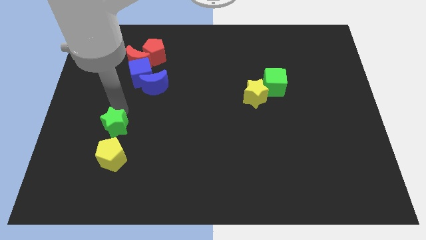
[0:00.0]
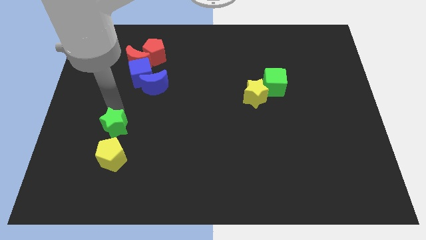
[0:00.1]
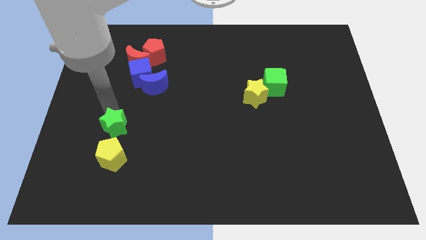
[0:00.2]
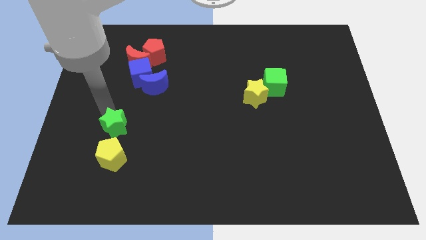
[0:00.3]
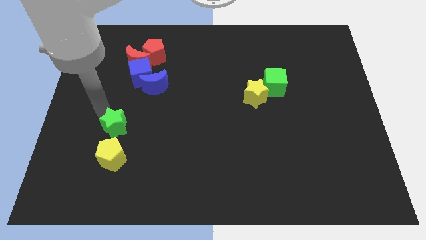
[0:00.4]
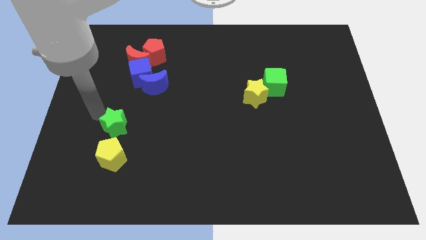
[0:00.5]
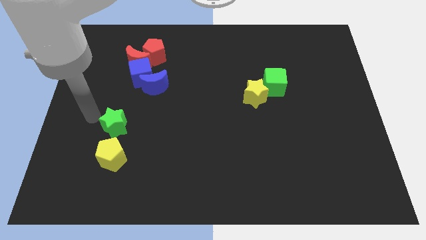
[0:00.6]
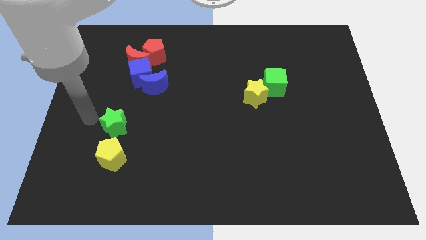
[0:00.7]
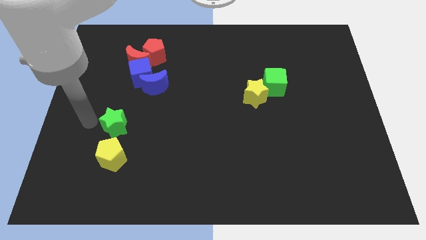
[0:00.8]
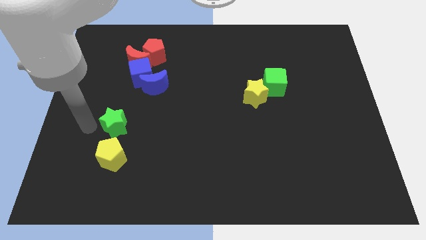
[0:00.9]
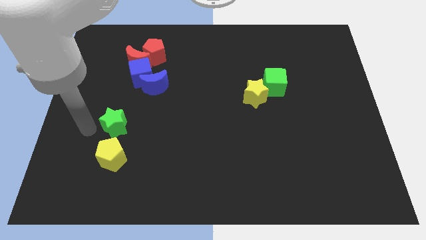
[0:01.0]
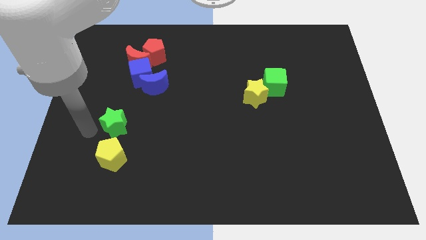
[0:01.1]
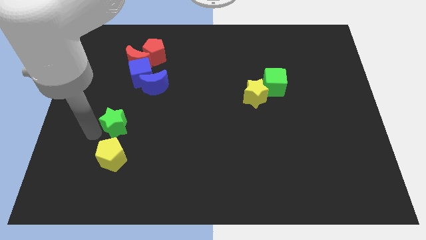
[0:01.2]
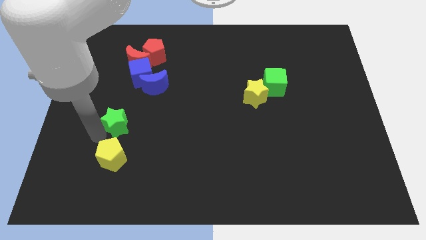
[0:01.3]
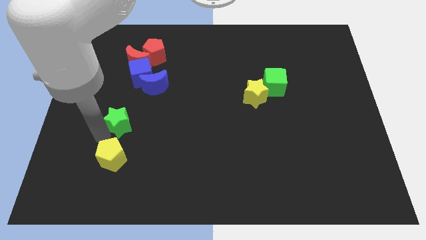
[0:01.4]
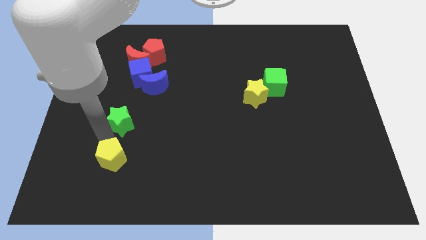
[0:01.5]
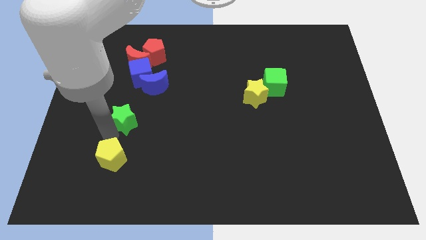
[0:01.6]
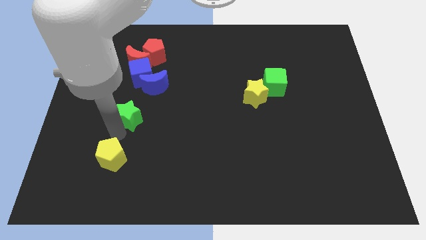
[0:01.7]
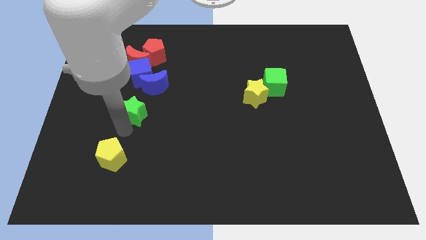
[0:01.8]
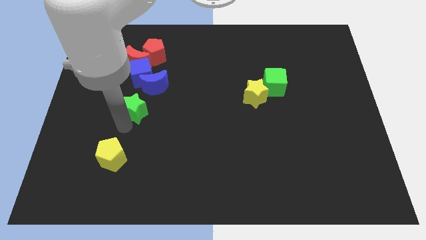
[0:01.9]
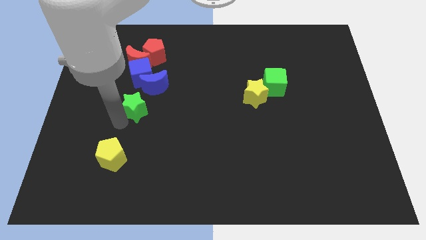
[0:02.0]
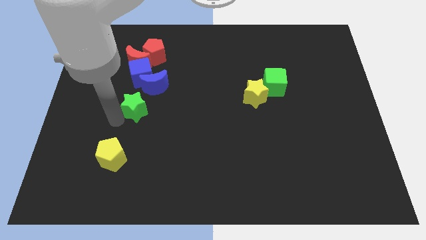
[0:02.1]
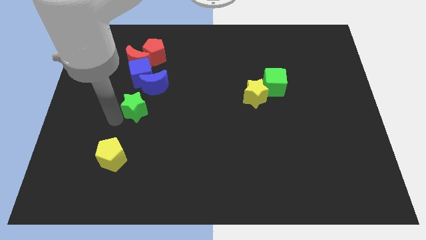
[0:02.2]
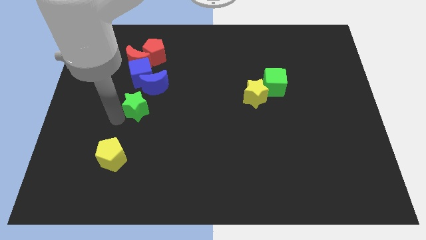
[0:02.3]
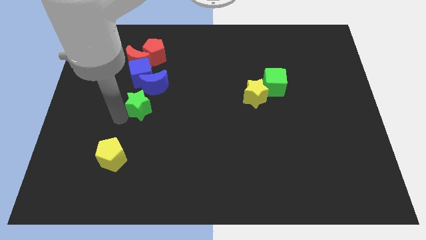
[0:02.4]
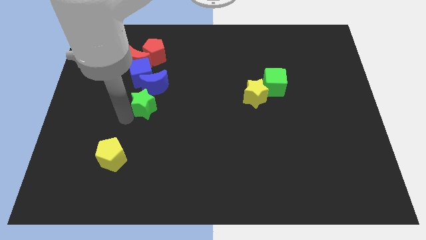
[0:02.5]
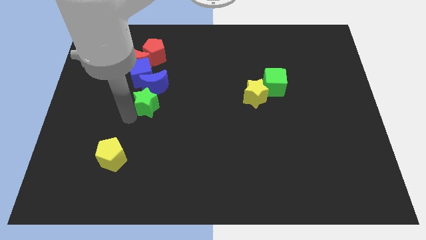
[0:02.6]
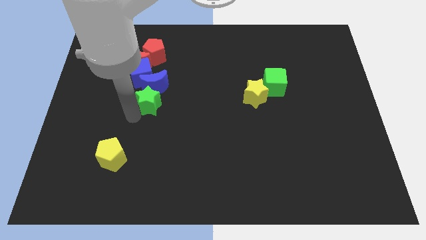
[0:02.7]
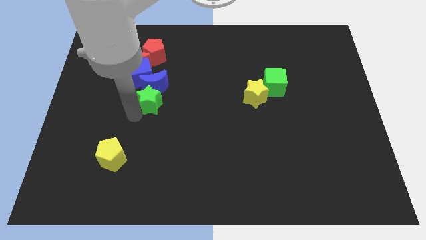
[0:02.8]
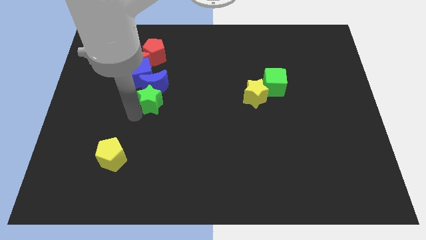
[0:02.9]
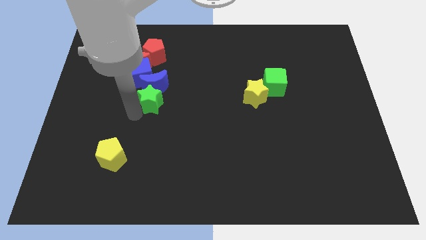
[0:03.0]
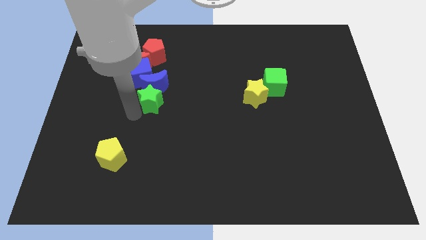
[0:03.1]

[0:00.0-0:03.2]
place the green star down to the blue crescent

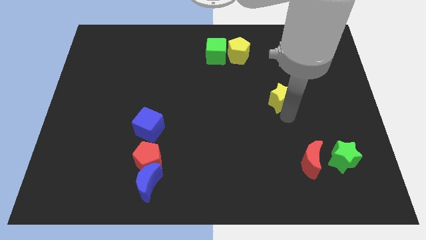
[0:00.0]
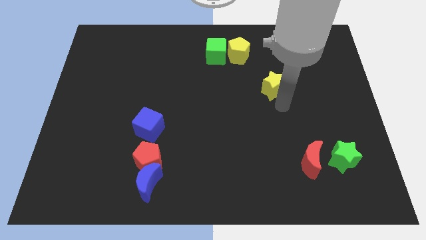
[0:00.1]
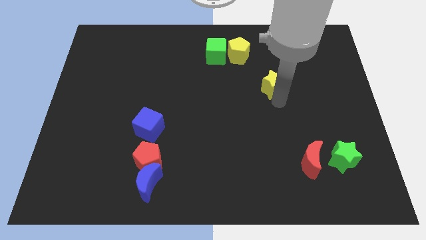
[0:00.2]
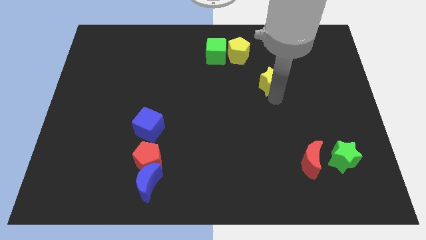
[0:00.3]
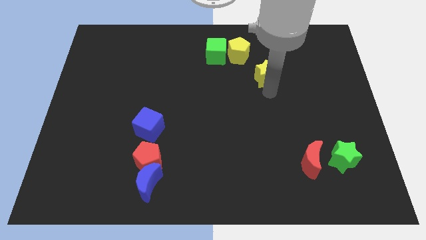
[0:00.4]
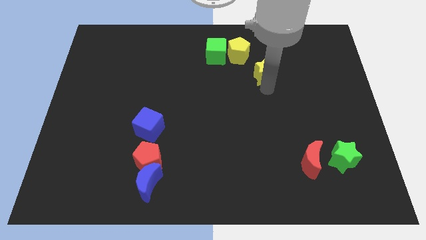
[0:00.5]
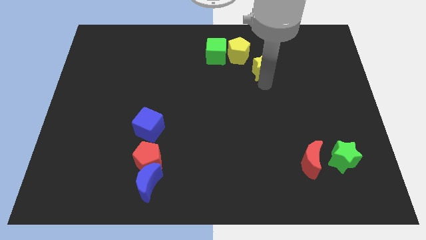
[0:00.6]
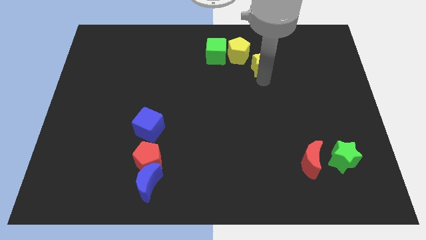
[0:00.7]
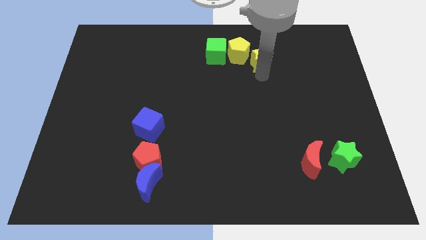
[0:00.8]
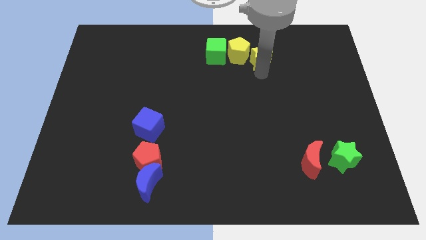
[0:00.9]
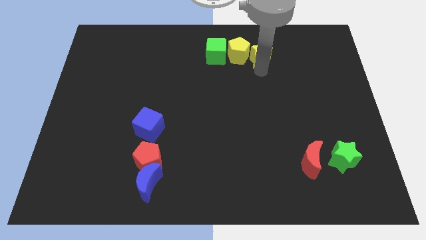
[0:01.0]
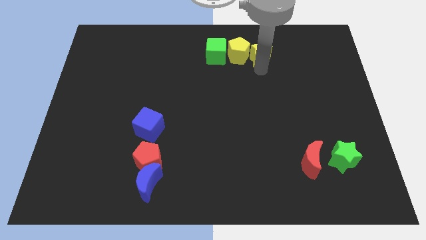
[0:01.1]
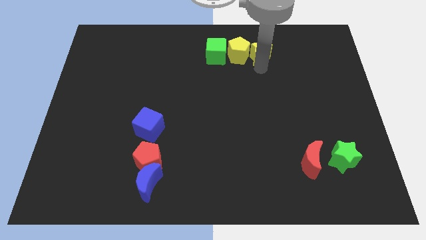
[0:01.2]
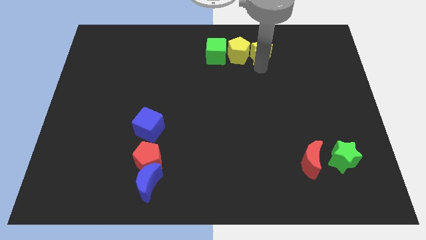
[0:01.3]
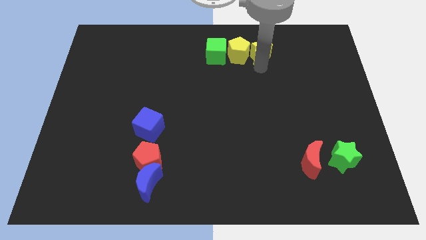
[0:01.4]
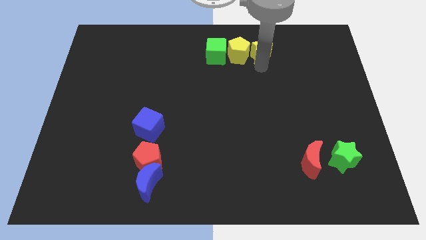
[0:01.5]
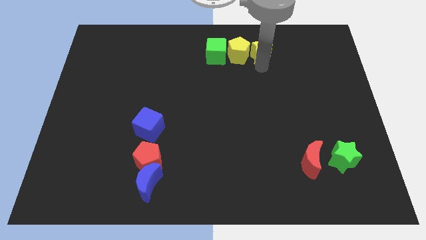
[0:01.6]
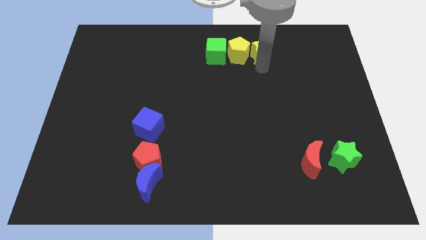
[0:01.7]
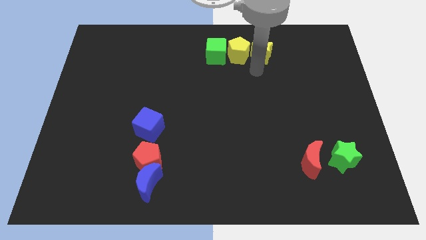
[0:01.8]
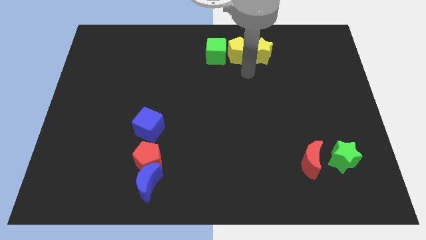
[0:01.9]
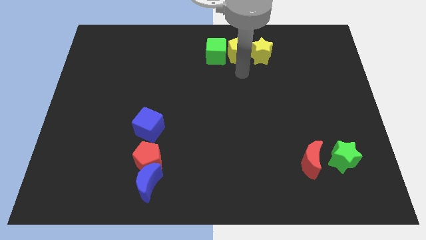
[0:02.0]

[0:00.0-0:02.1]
place the yellow star right to the yellow pentagon

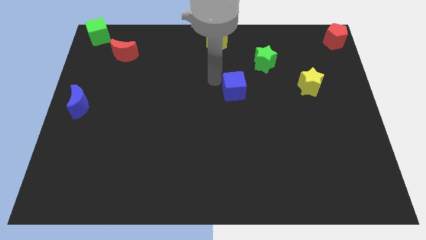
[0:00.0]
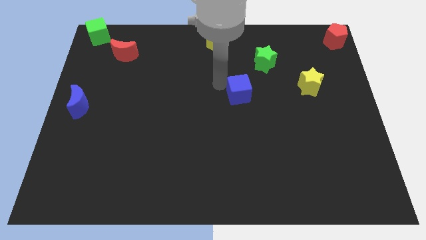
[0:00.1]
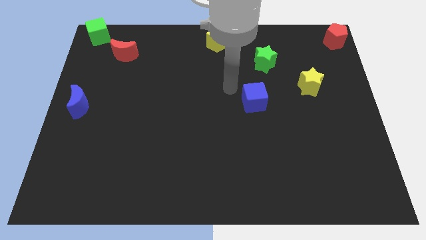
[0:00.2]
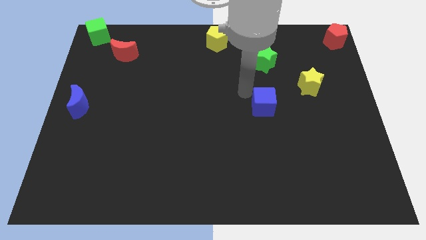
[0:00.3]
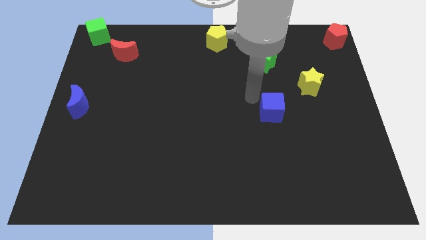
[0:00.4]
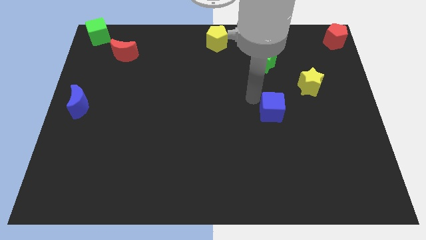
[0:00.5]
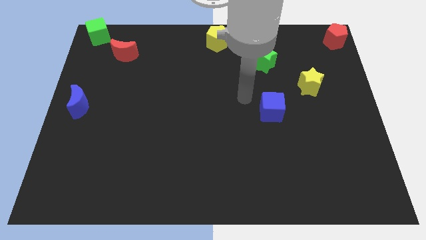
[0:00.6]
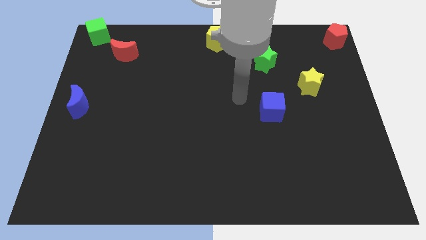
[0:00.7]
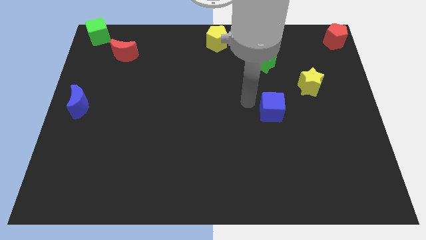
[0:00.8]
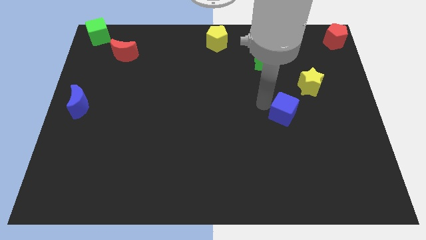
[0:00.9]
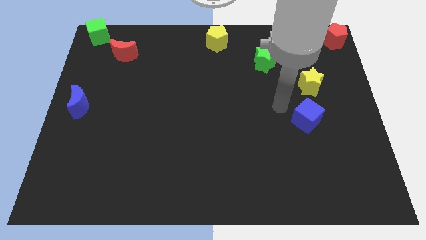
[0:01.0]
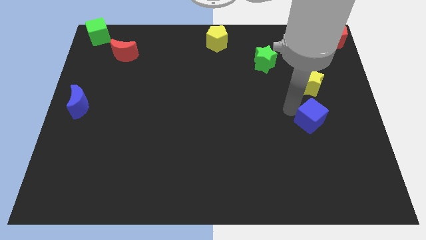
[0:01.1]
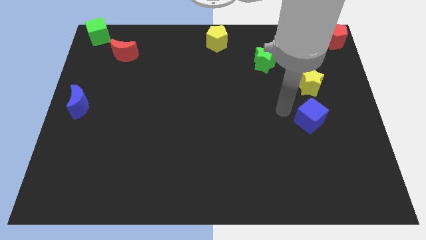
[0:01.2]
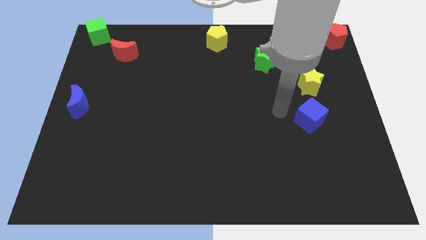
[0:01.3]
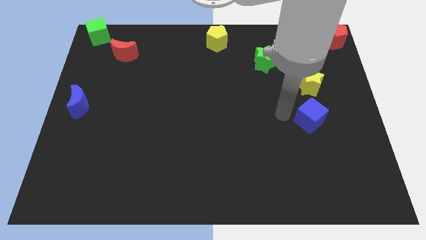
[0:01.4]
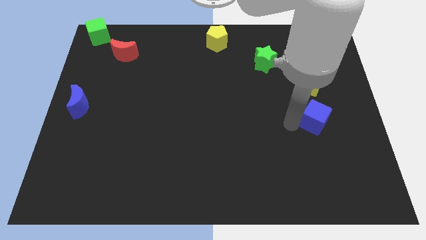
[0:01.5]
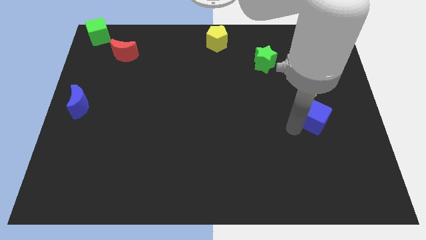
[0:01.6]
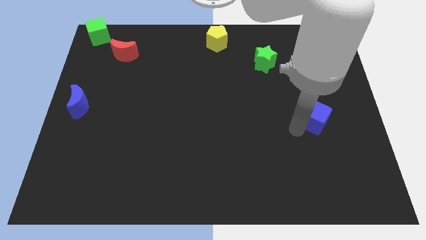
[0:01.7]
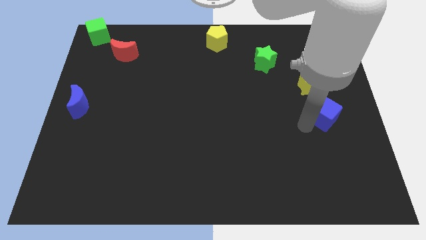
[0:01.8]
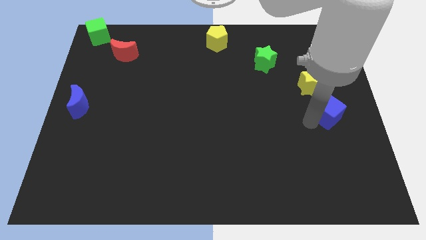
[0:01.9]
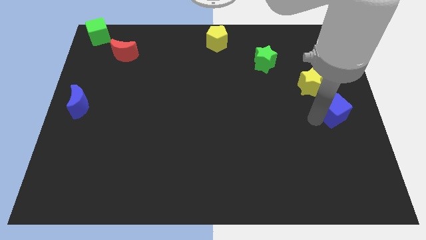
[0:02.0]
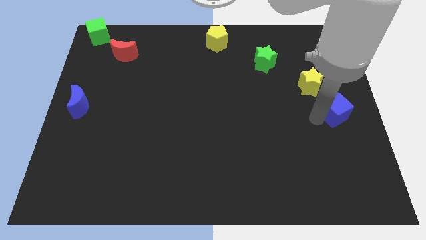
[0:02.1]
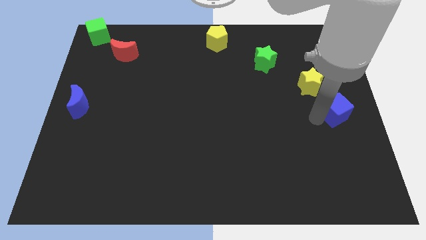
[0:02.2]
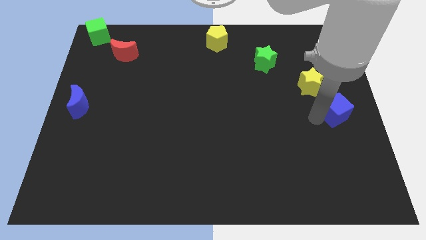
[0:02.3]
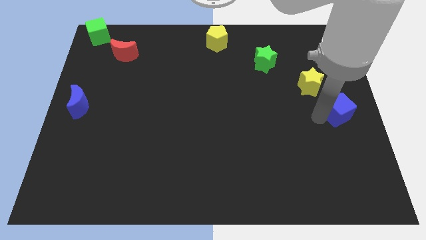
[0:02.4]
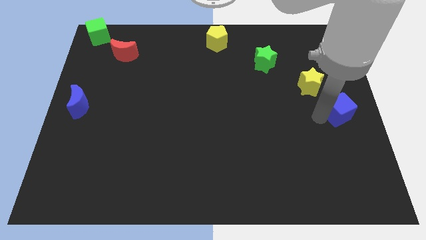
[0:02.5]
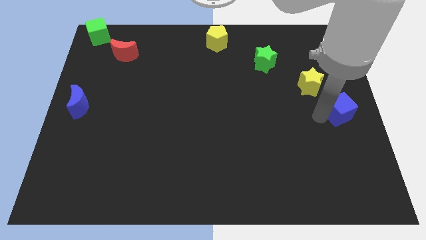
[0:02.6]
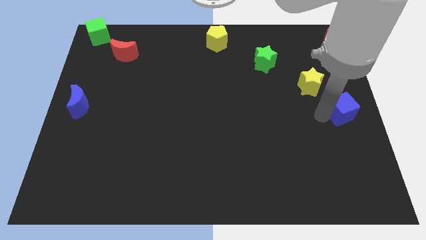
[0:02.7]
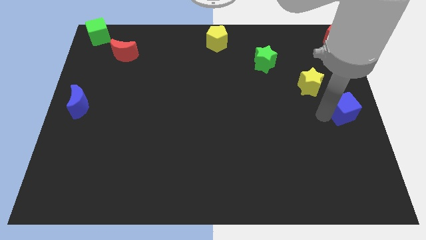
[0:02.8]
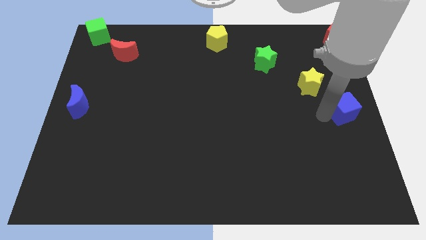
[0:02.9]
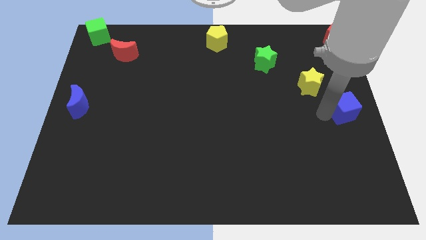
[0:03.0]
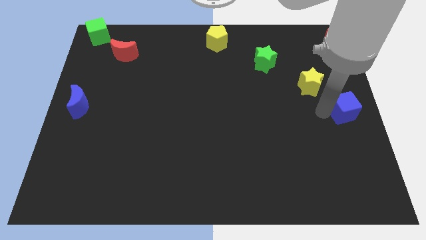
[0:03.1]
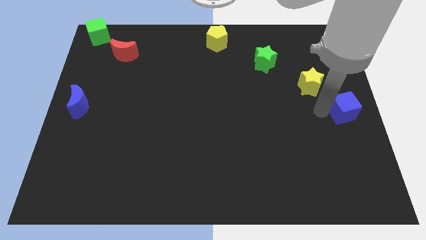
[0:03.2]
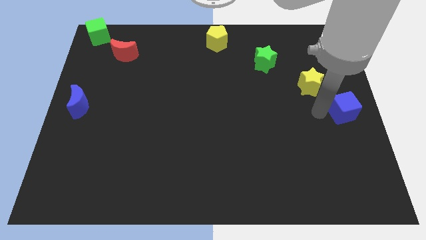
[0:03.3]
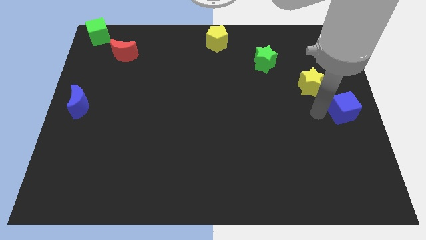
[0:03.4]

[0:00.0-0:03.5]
place the blue cube right side center of the board
